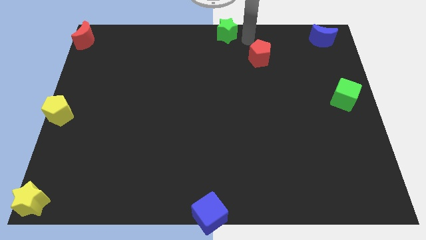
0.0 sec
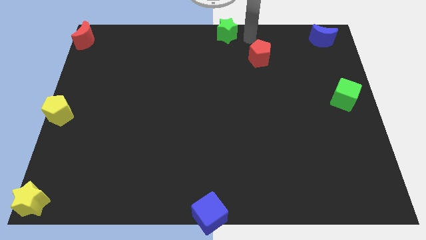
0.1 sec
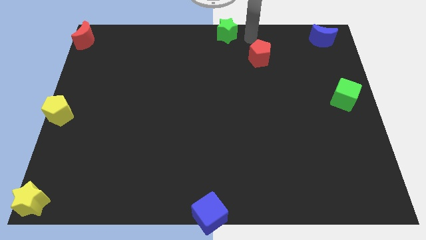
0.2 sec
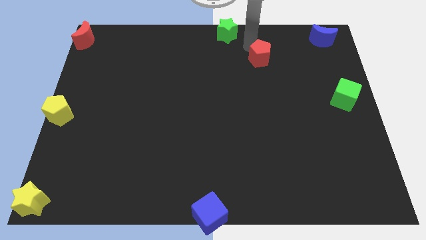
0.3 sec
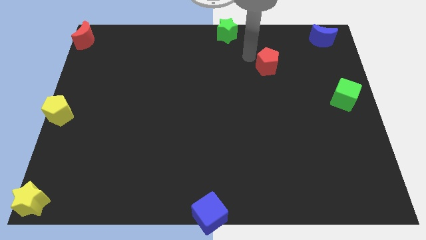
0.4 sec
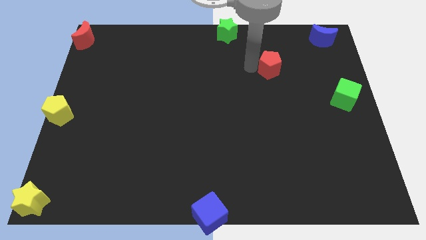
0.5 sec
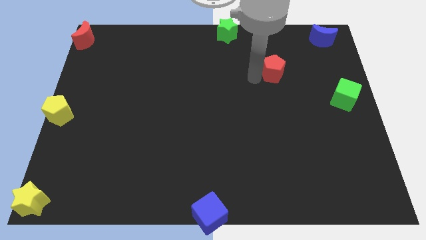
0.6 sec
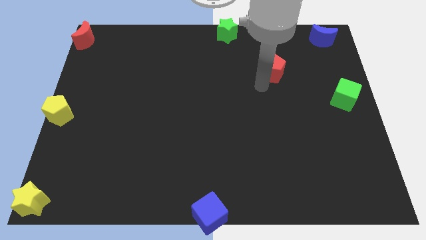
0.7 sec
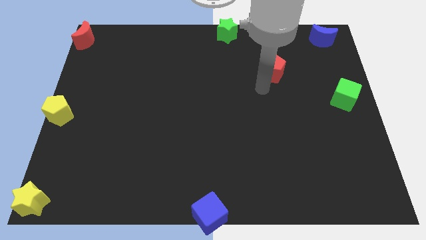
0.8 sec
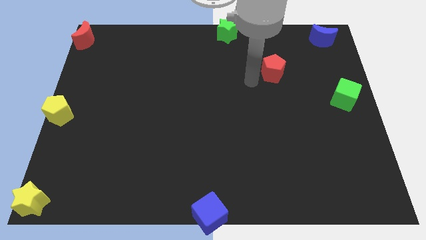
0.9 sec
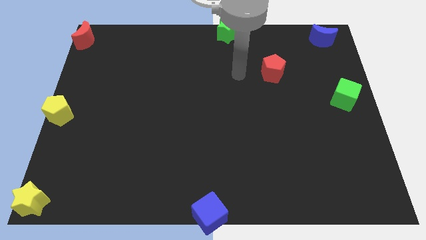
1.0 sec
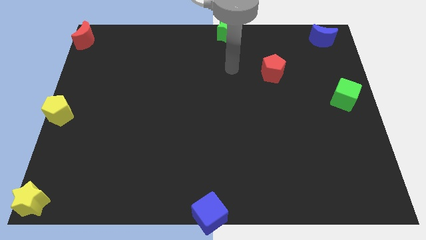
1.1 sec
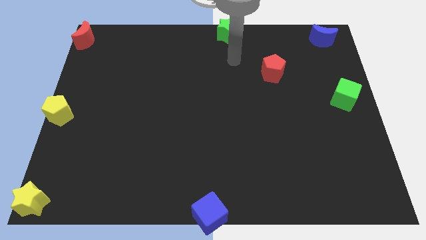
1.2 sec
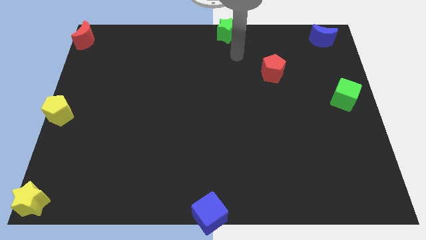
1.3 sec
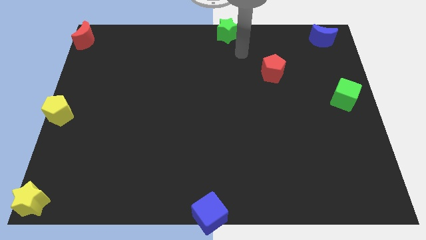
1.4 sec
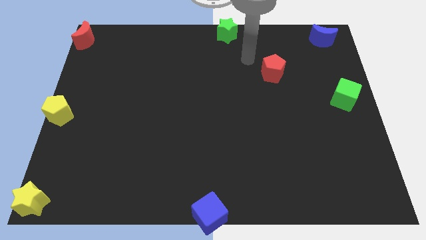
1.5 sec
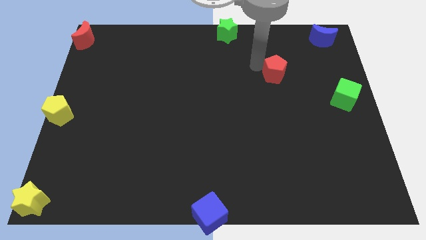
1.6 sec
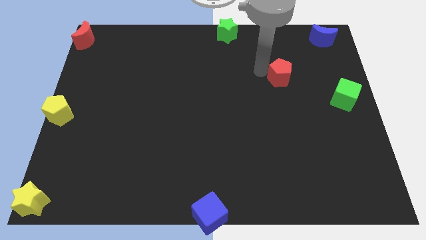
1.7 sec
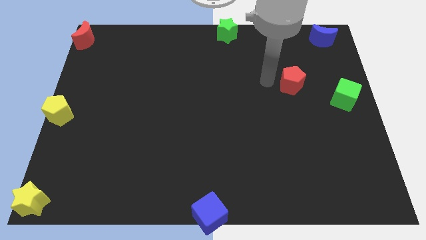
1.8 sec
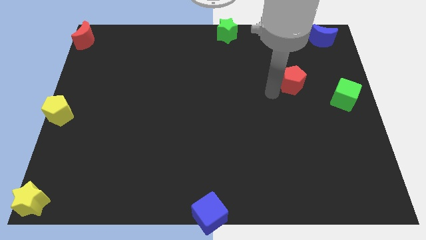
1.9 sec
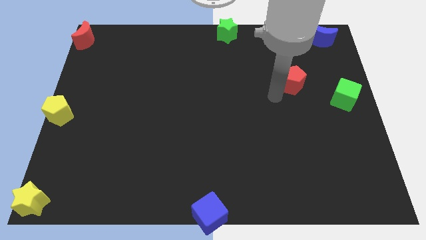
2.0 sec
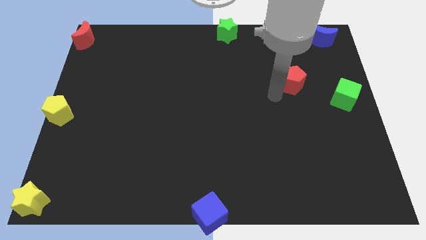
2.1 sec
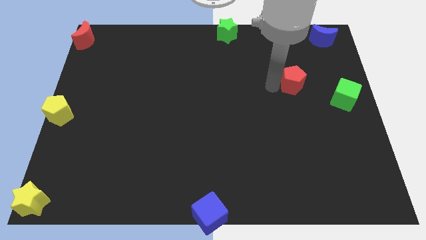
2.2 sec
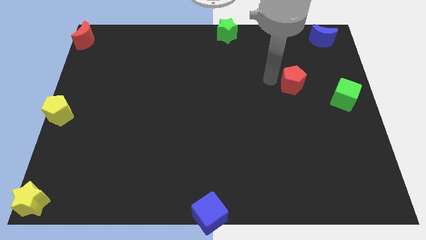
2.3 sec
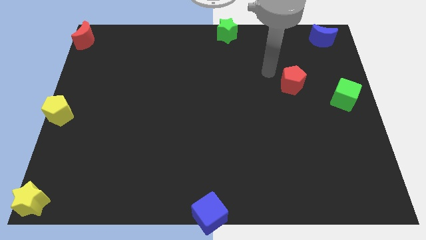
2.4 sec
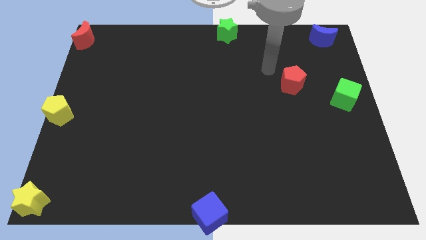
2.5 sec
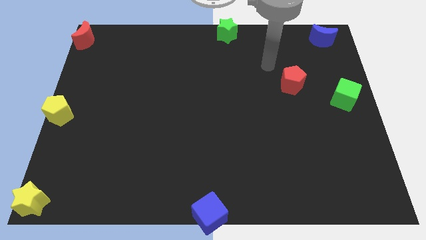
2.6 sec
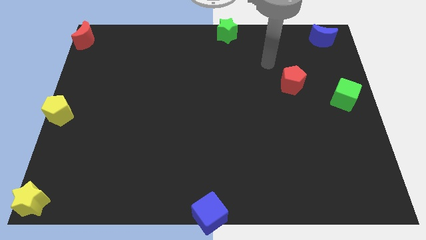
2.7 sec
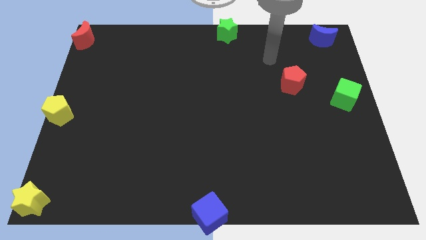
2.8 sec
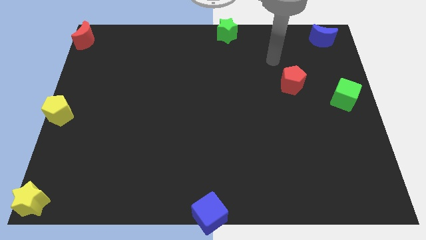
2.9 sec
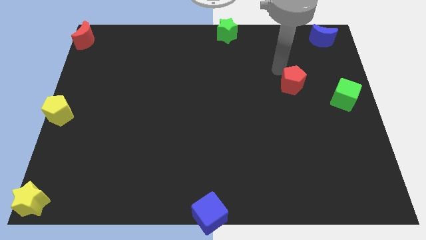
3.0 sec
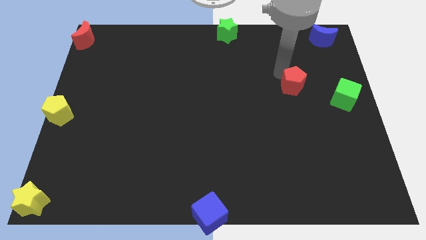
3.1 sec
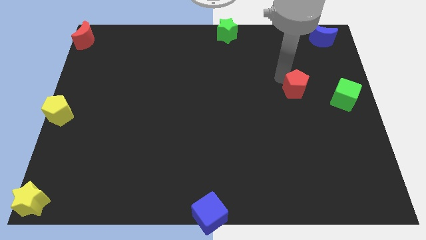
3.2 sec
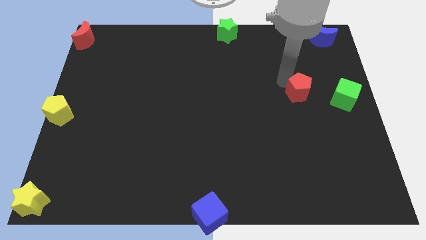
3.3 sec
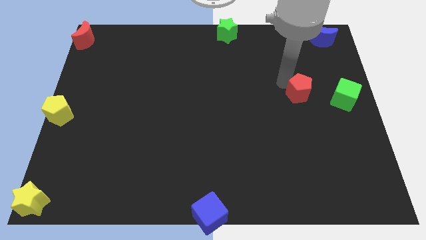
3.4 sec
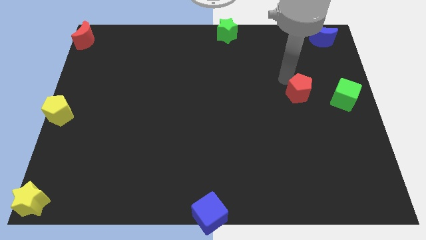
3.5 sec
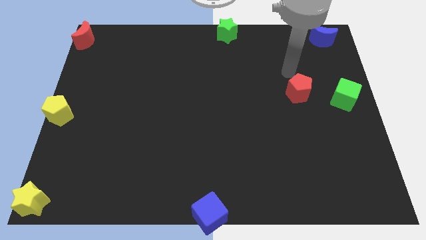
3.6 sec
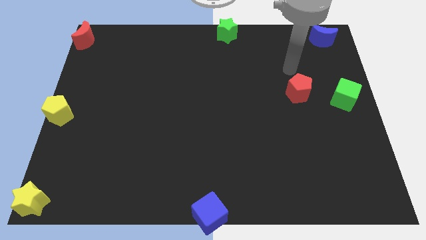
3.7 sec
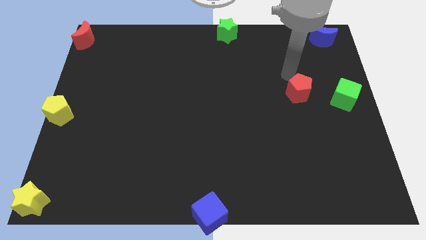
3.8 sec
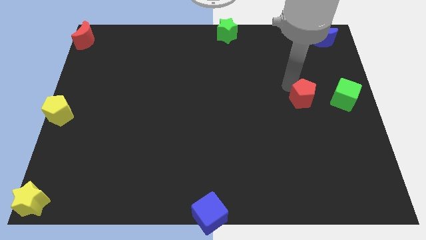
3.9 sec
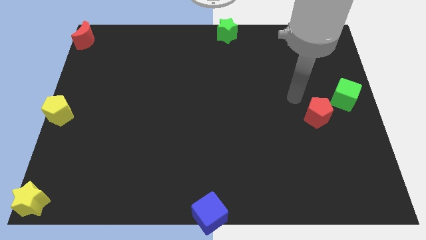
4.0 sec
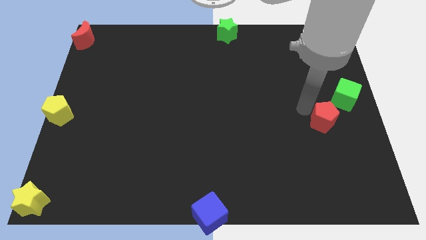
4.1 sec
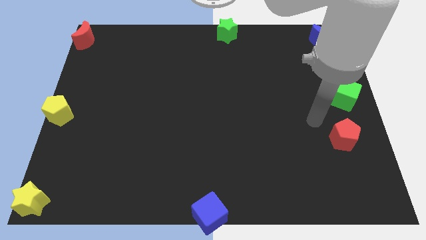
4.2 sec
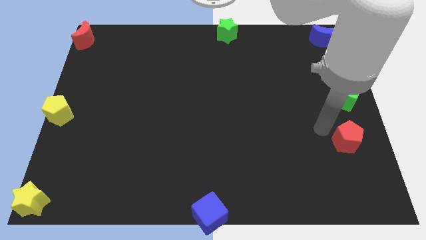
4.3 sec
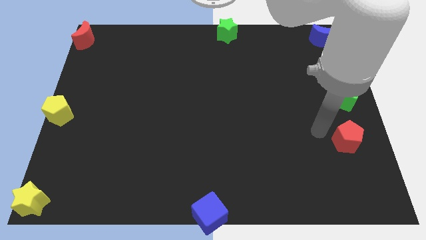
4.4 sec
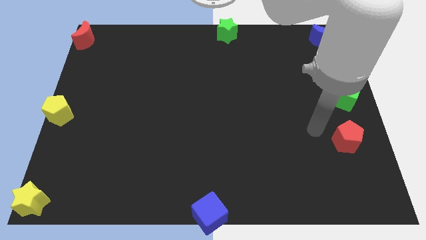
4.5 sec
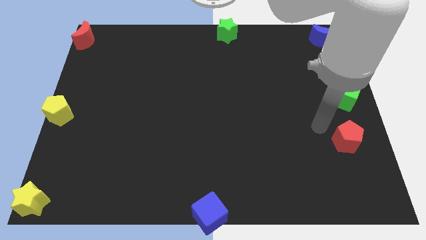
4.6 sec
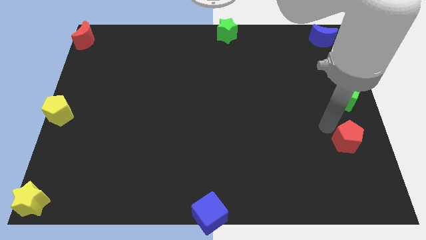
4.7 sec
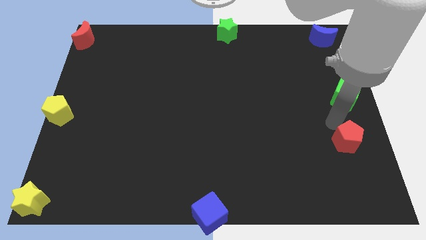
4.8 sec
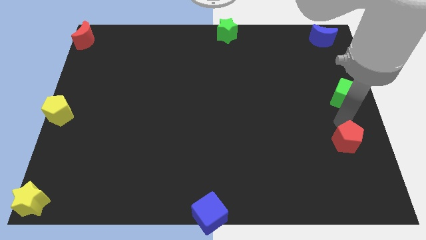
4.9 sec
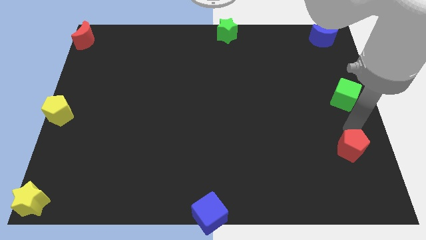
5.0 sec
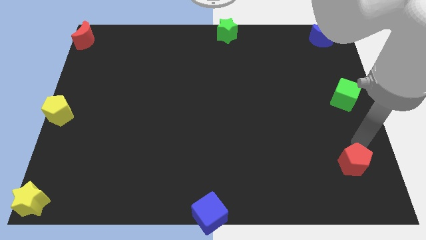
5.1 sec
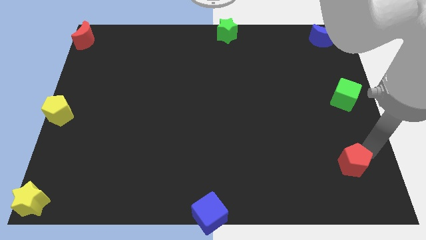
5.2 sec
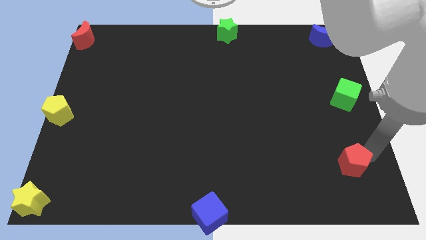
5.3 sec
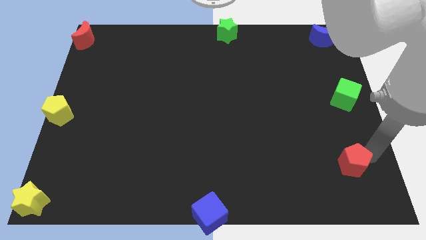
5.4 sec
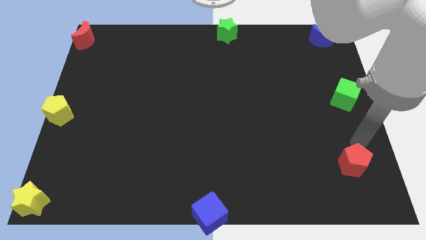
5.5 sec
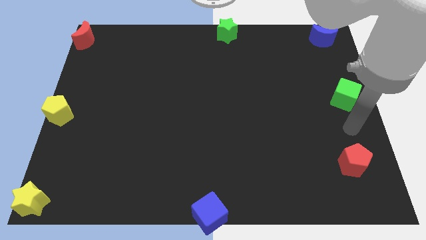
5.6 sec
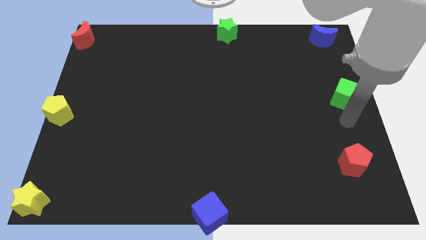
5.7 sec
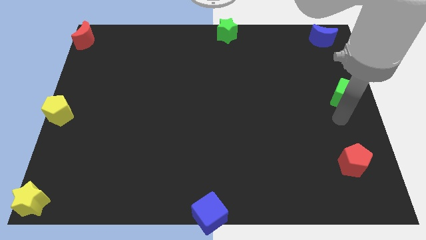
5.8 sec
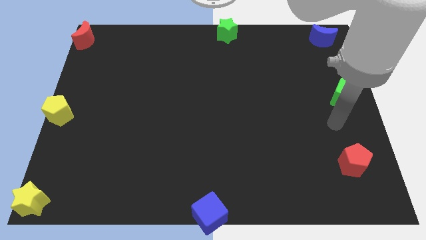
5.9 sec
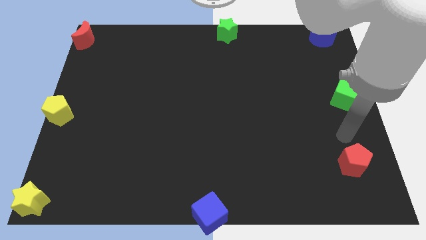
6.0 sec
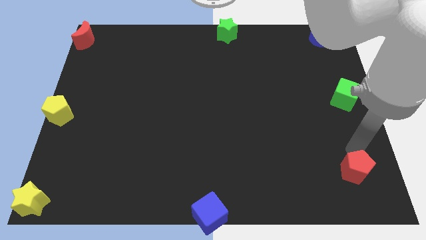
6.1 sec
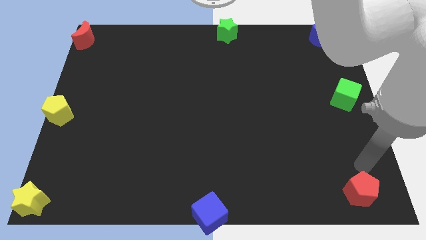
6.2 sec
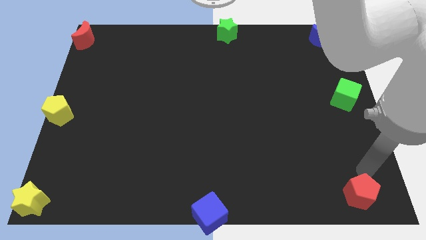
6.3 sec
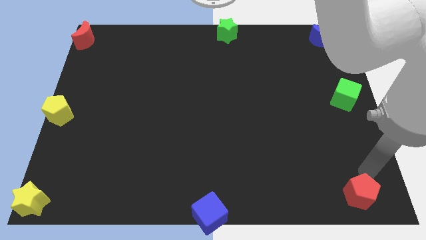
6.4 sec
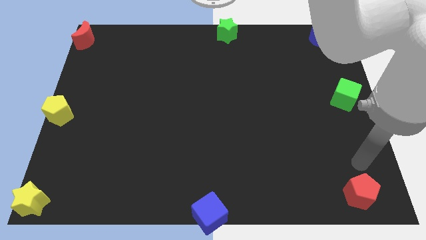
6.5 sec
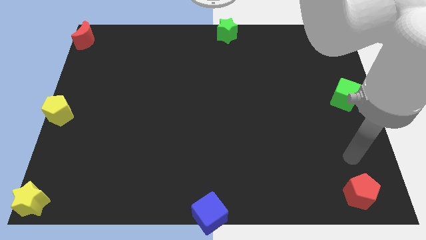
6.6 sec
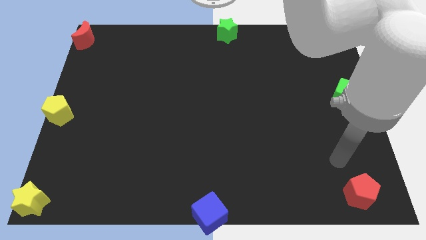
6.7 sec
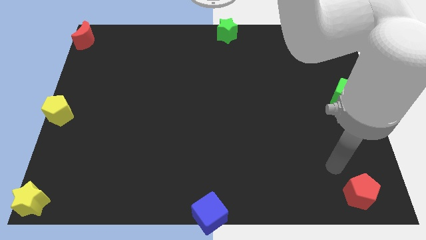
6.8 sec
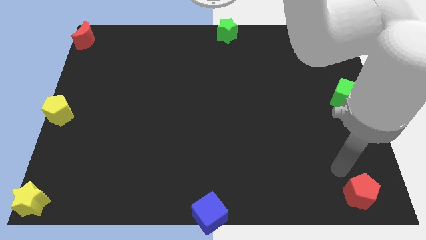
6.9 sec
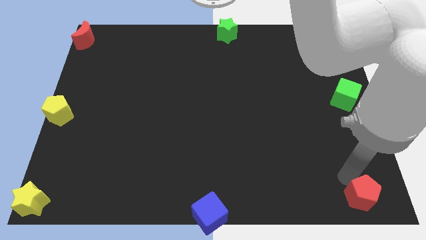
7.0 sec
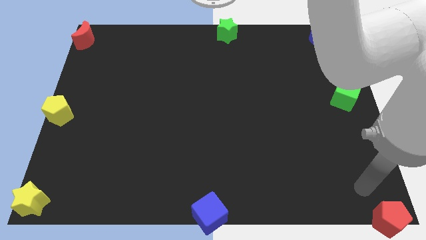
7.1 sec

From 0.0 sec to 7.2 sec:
push the red pentagon towards right bottom corner

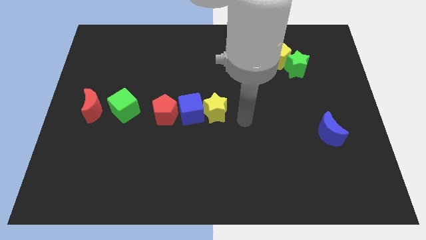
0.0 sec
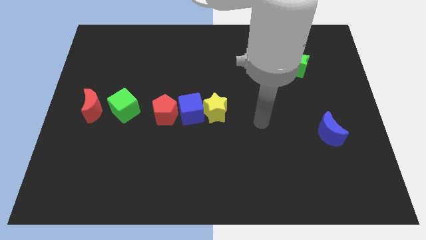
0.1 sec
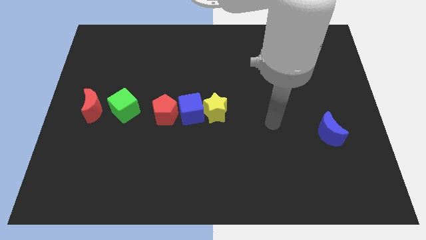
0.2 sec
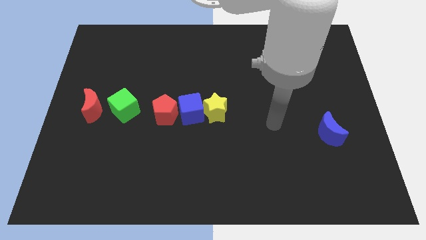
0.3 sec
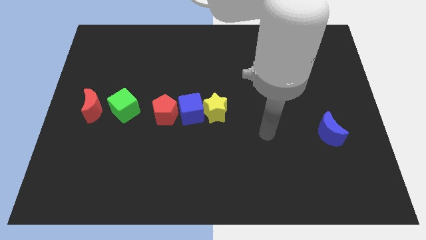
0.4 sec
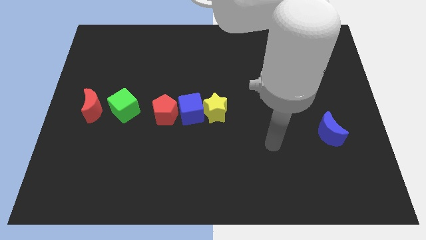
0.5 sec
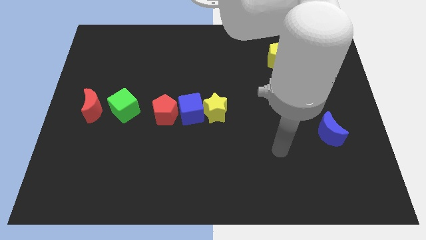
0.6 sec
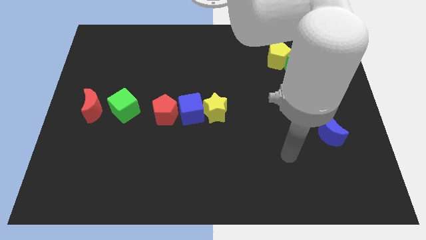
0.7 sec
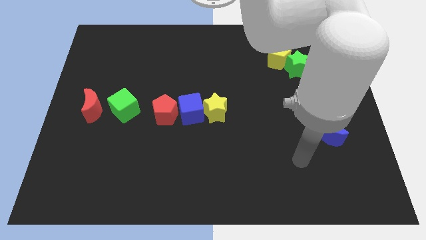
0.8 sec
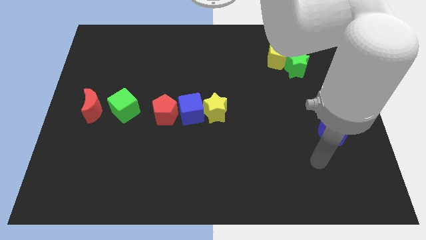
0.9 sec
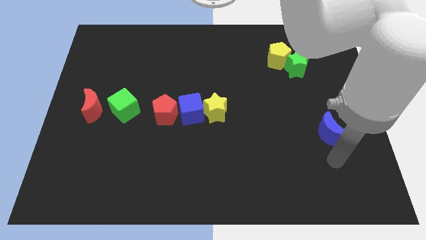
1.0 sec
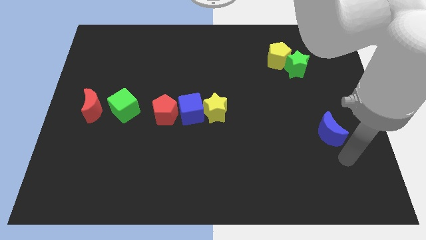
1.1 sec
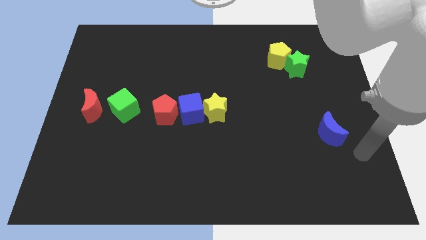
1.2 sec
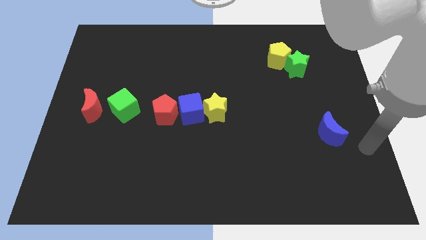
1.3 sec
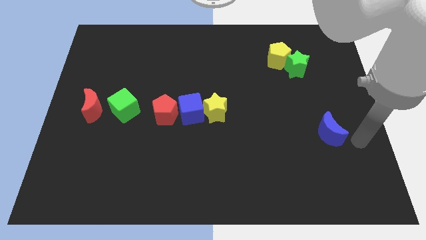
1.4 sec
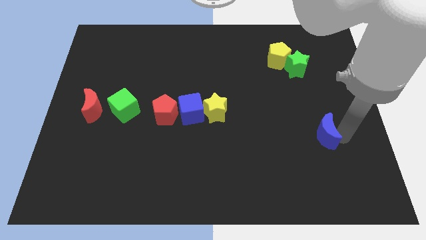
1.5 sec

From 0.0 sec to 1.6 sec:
move yourself away from the yellow star

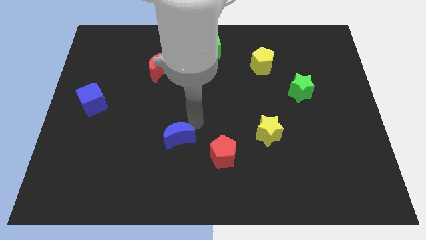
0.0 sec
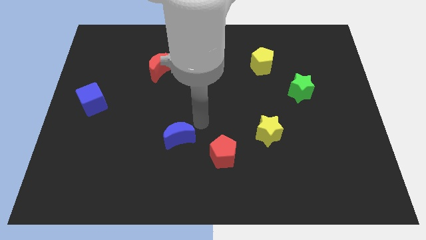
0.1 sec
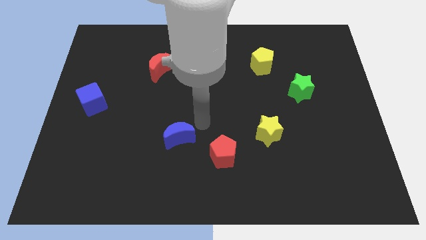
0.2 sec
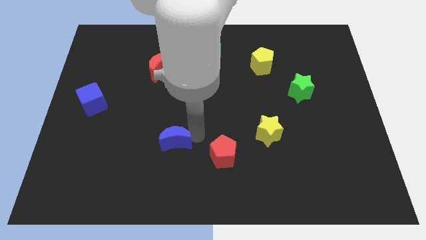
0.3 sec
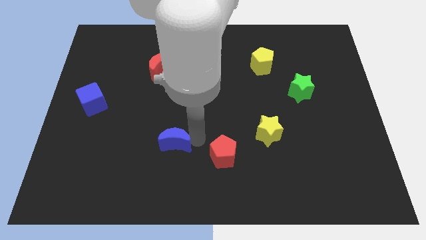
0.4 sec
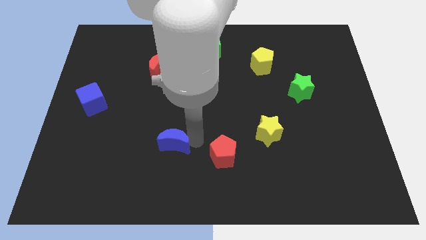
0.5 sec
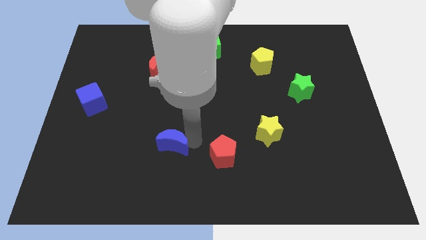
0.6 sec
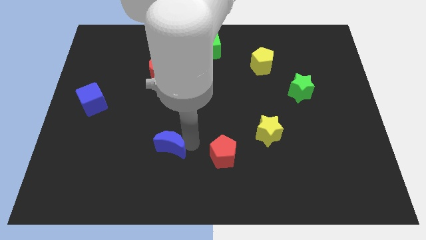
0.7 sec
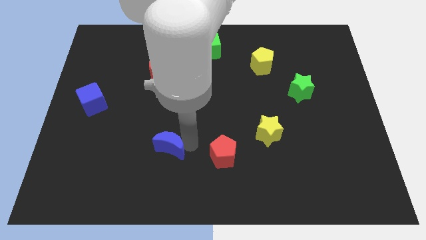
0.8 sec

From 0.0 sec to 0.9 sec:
place the blue crescent to the left of the red pentagon
